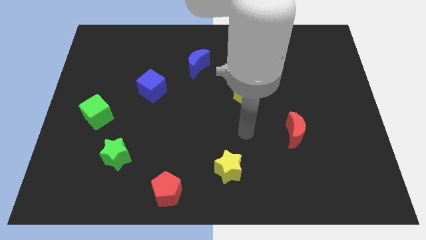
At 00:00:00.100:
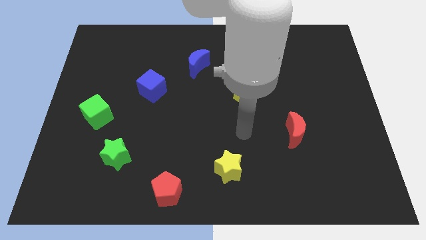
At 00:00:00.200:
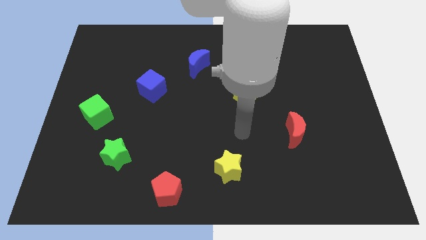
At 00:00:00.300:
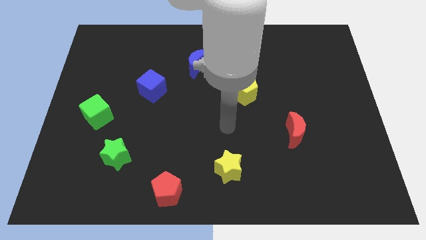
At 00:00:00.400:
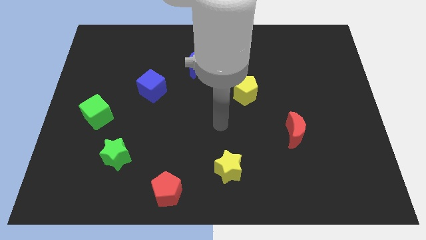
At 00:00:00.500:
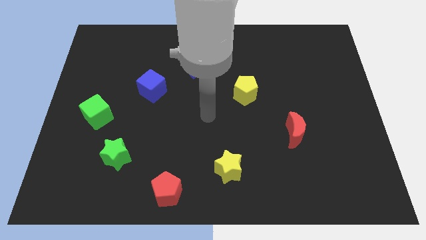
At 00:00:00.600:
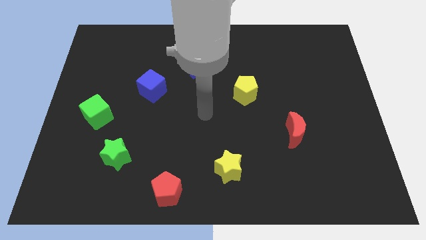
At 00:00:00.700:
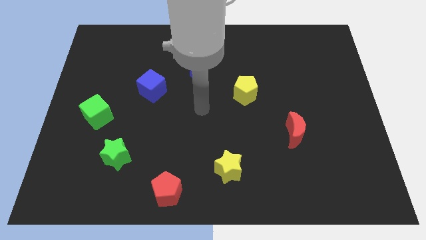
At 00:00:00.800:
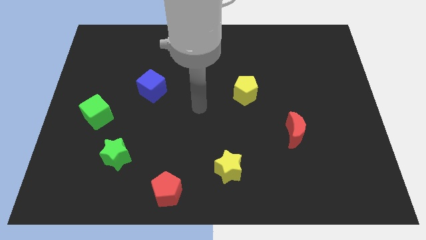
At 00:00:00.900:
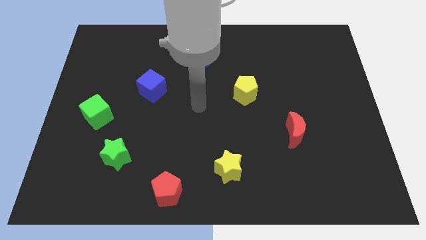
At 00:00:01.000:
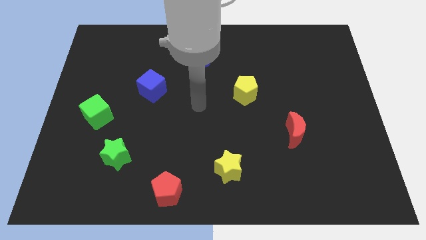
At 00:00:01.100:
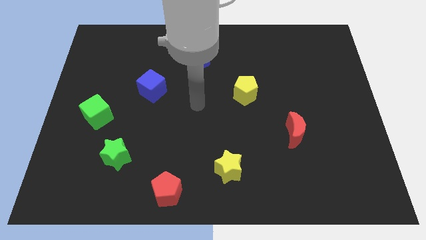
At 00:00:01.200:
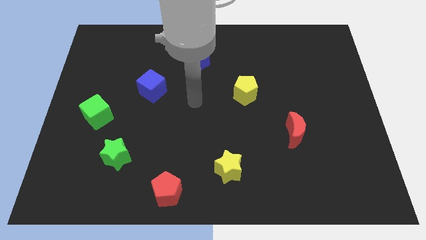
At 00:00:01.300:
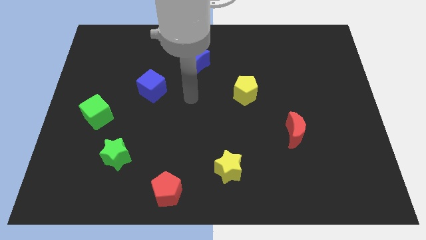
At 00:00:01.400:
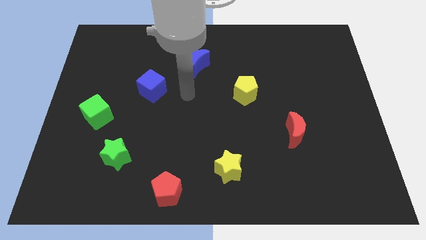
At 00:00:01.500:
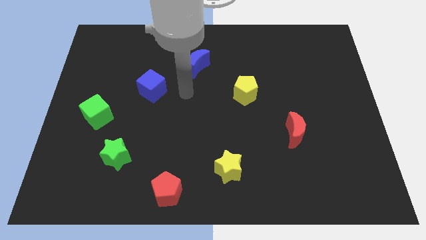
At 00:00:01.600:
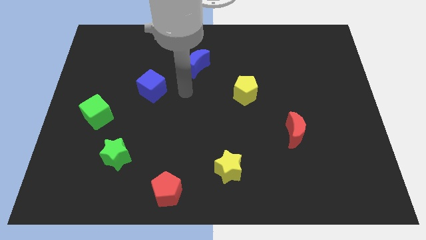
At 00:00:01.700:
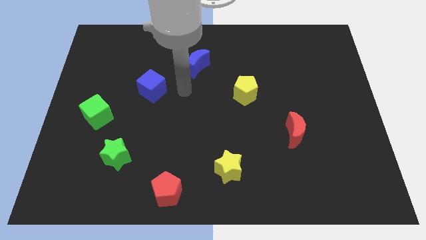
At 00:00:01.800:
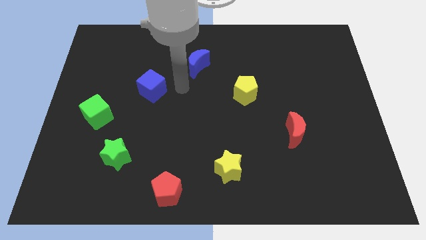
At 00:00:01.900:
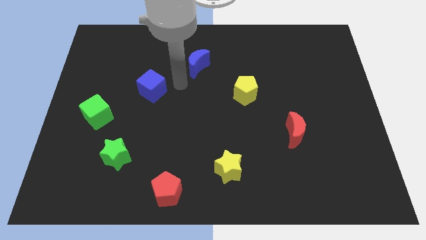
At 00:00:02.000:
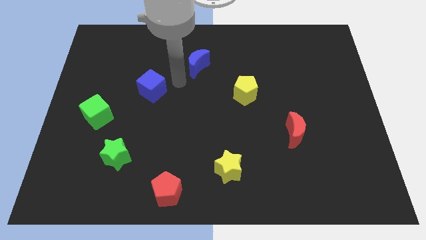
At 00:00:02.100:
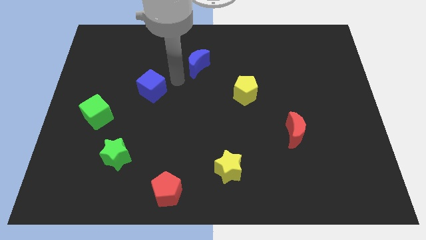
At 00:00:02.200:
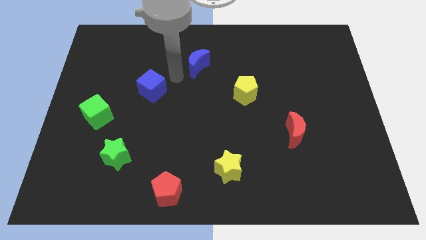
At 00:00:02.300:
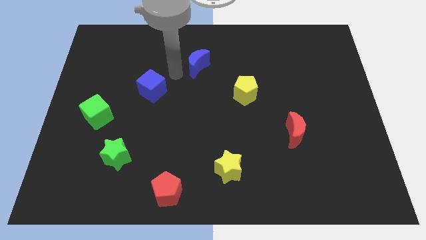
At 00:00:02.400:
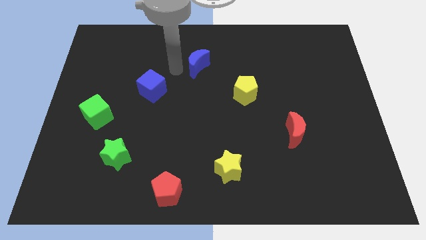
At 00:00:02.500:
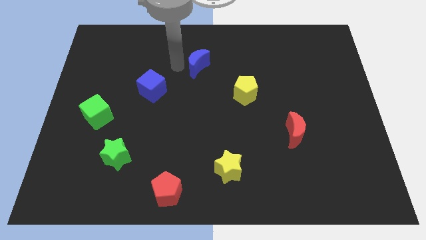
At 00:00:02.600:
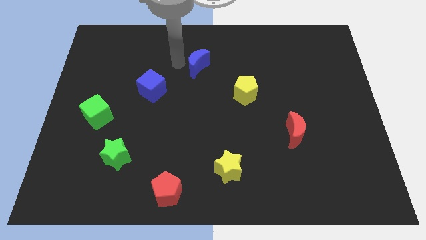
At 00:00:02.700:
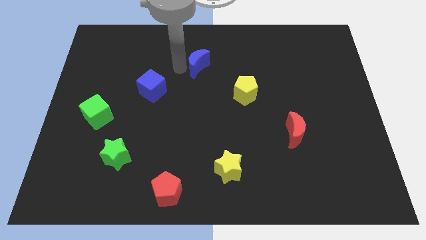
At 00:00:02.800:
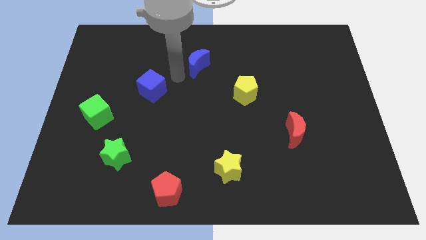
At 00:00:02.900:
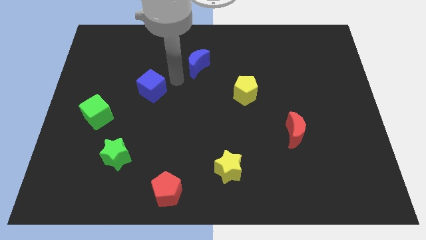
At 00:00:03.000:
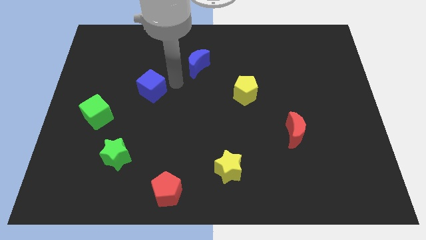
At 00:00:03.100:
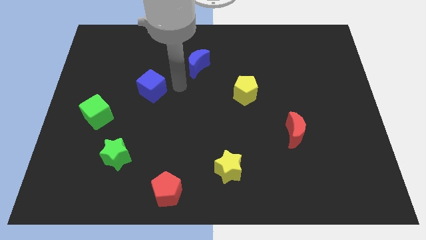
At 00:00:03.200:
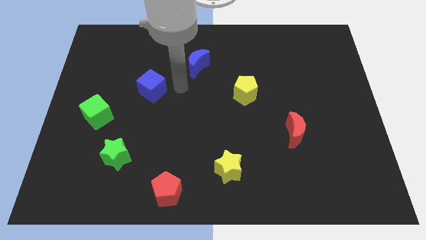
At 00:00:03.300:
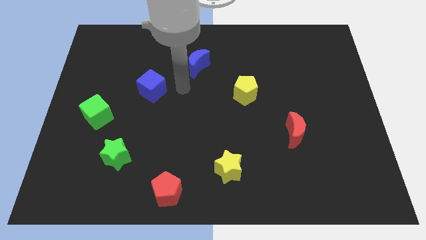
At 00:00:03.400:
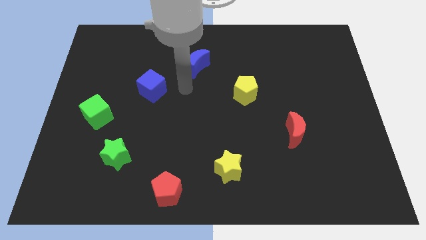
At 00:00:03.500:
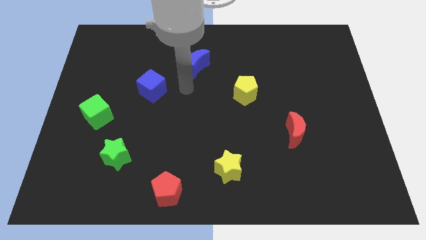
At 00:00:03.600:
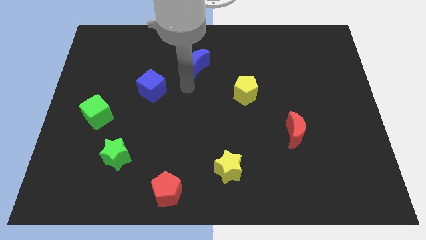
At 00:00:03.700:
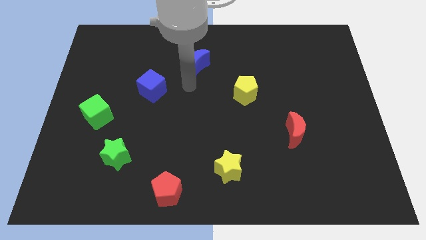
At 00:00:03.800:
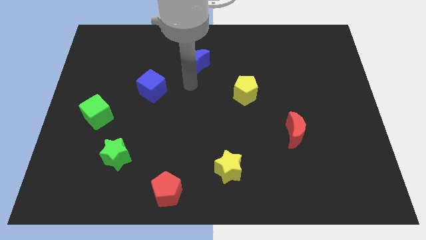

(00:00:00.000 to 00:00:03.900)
move your arm to the bottom of blue crescent

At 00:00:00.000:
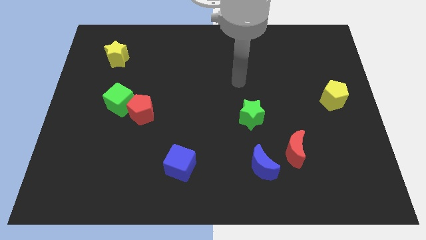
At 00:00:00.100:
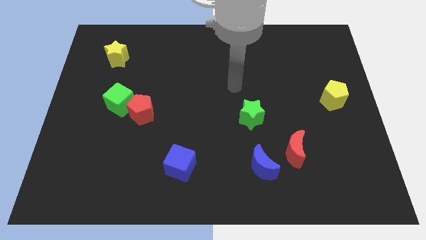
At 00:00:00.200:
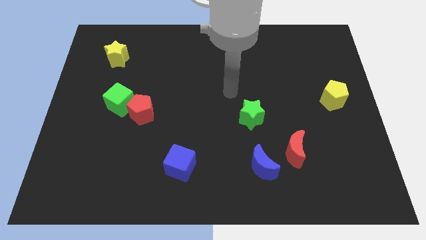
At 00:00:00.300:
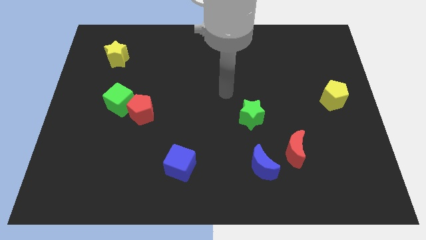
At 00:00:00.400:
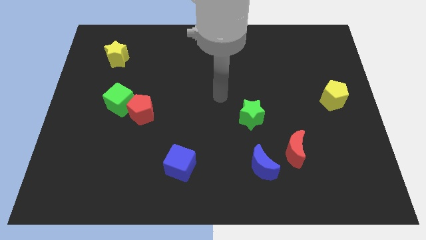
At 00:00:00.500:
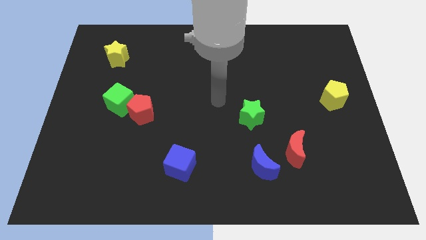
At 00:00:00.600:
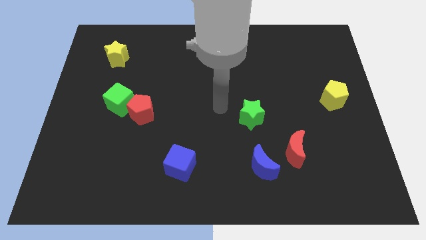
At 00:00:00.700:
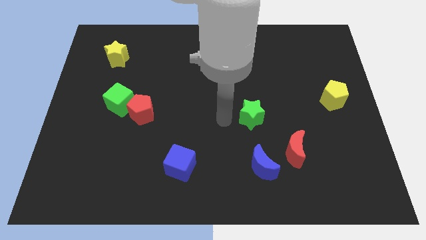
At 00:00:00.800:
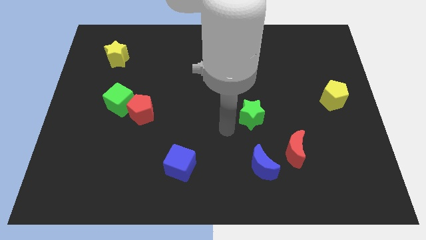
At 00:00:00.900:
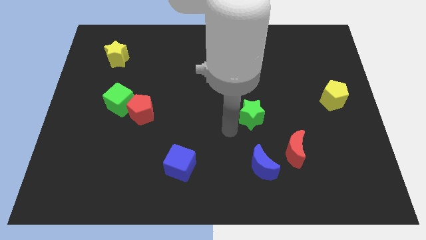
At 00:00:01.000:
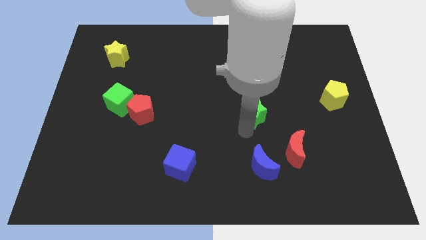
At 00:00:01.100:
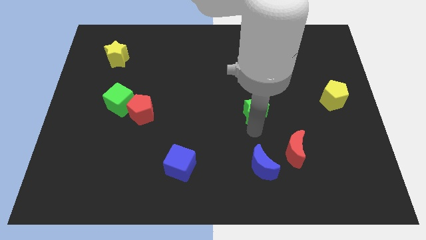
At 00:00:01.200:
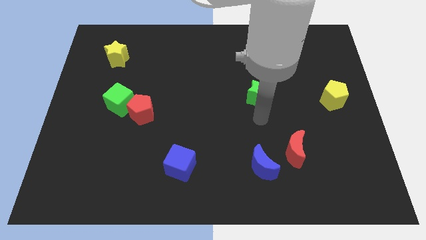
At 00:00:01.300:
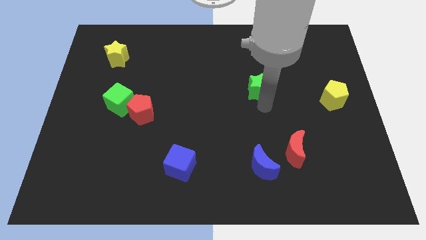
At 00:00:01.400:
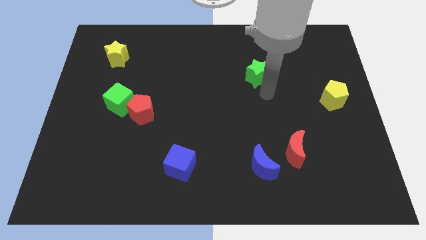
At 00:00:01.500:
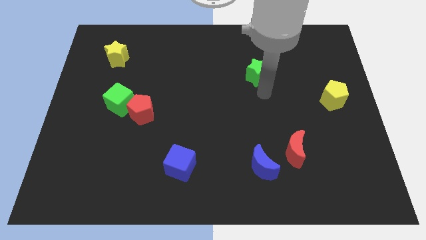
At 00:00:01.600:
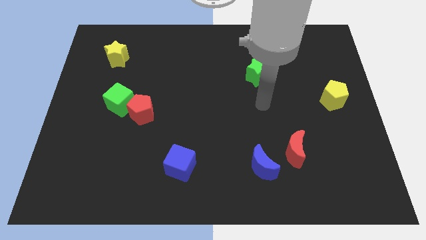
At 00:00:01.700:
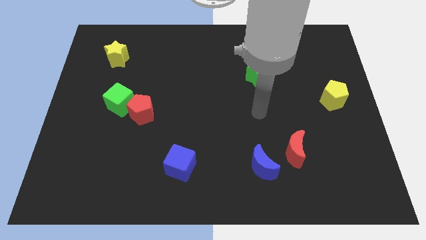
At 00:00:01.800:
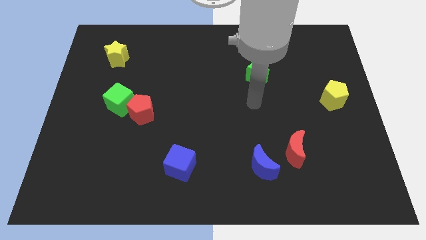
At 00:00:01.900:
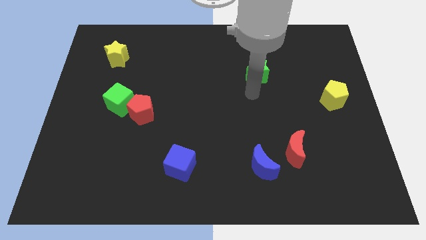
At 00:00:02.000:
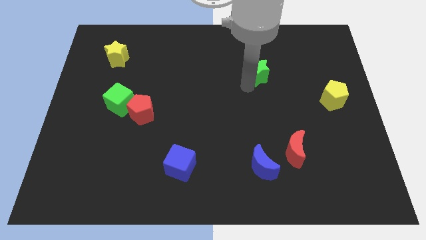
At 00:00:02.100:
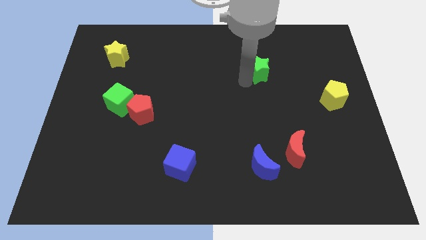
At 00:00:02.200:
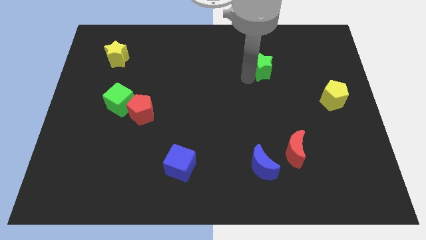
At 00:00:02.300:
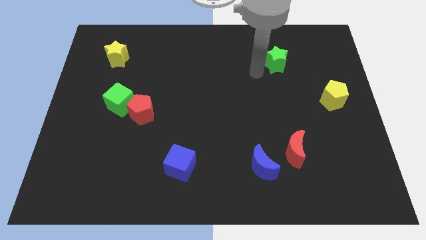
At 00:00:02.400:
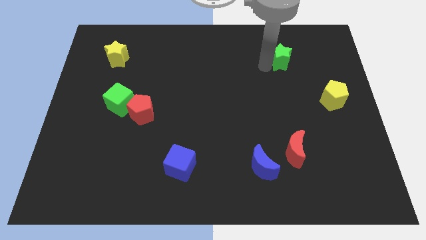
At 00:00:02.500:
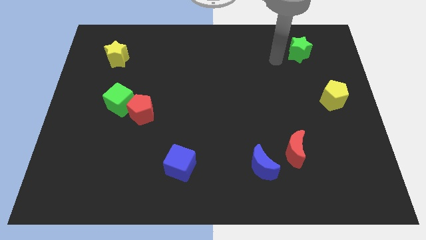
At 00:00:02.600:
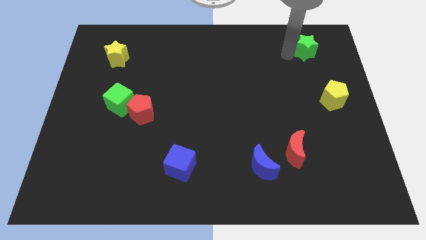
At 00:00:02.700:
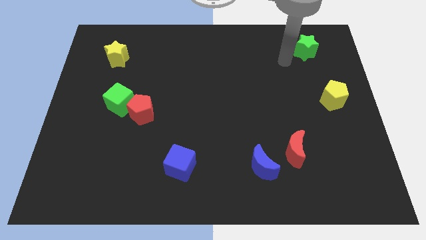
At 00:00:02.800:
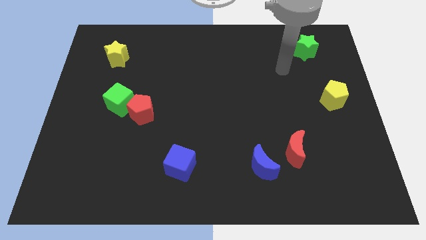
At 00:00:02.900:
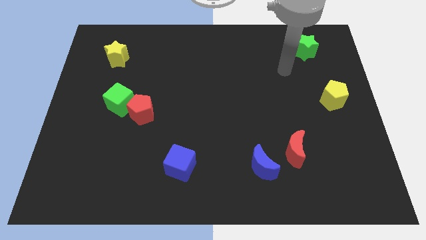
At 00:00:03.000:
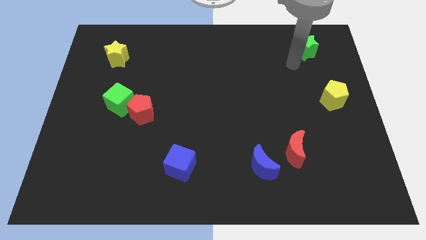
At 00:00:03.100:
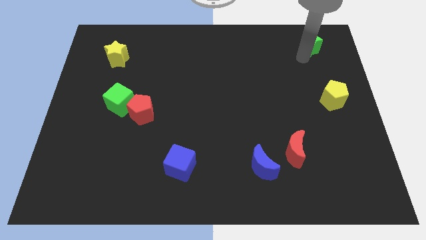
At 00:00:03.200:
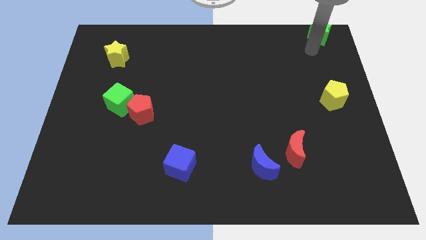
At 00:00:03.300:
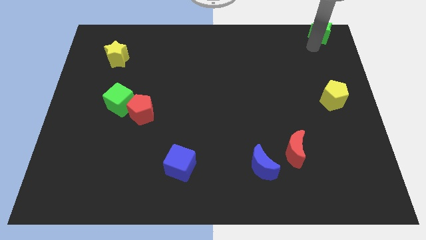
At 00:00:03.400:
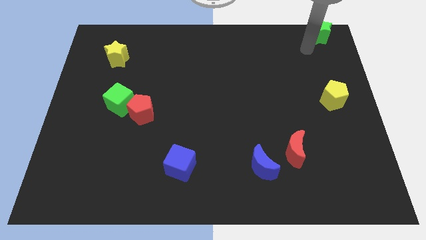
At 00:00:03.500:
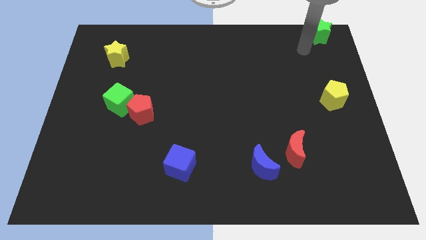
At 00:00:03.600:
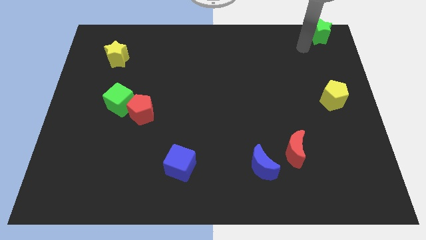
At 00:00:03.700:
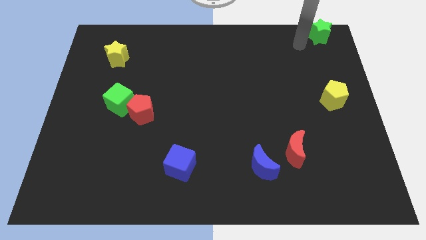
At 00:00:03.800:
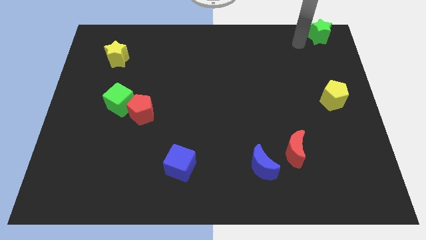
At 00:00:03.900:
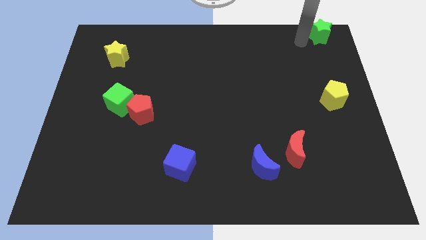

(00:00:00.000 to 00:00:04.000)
push the green star towards the top right corner of the board

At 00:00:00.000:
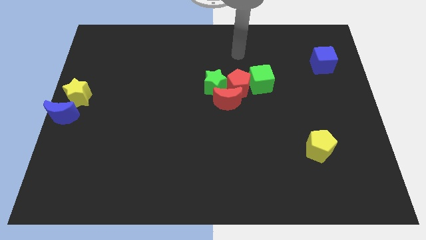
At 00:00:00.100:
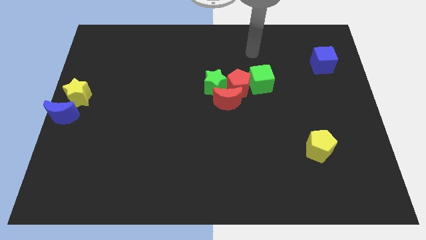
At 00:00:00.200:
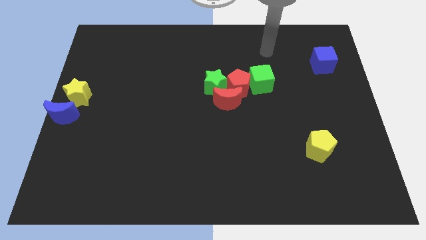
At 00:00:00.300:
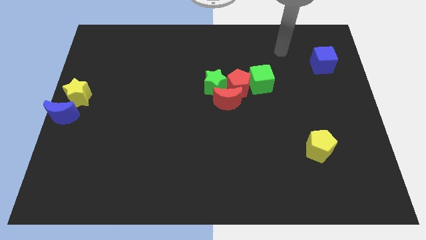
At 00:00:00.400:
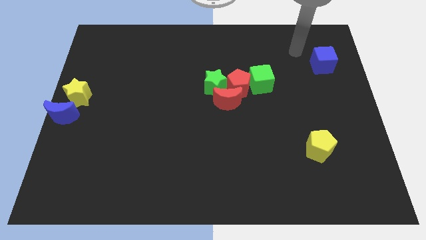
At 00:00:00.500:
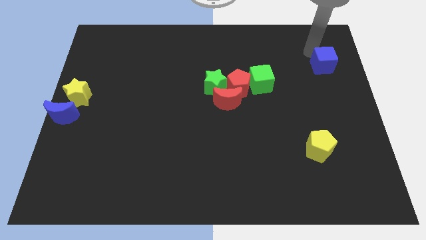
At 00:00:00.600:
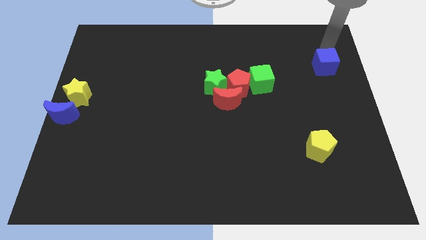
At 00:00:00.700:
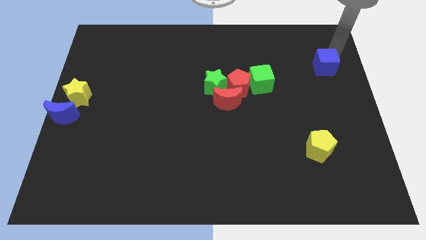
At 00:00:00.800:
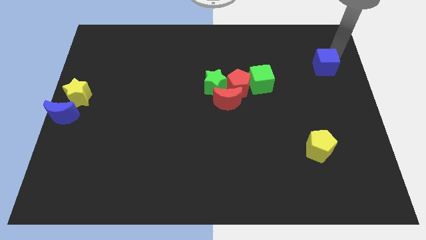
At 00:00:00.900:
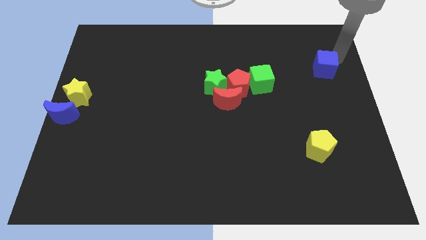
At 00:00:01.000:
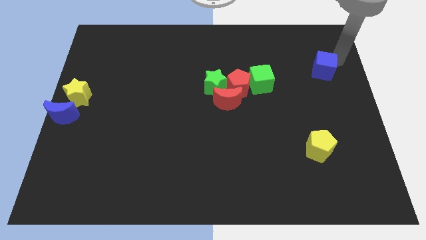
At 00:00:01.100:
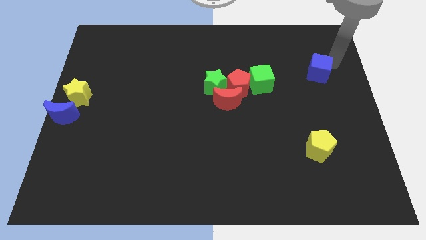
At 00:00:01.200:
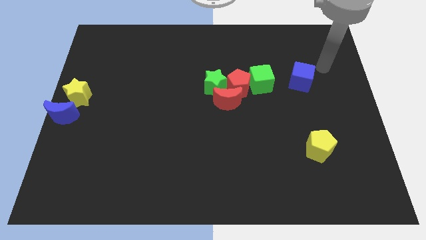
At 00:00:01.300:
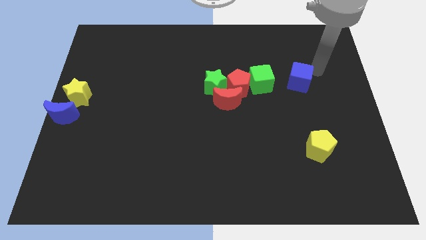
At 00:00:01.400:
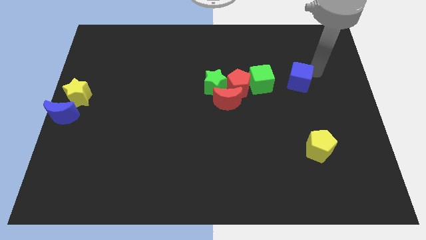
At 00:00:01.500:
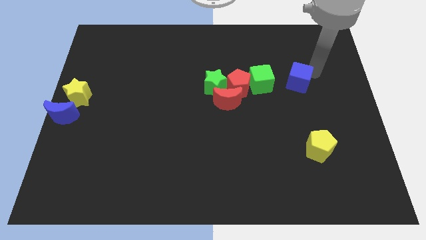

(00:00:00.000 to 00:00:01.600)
drag the blue moon towards the green cube
